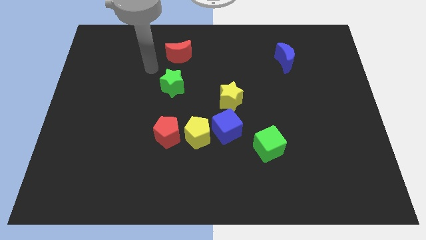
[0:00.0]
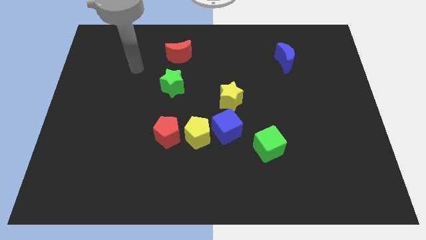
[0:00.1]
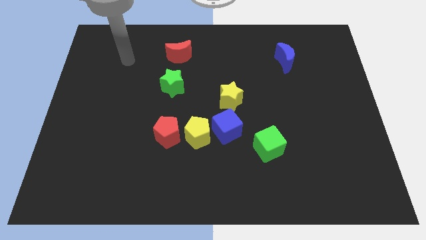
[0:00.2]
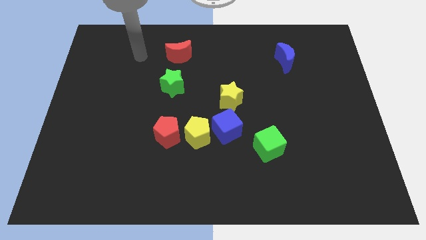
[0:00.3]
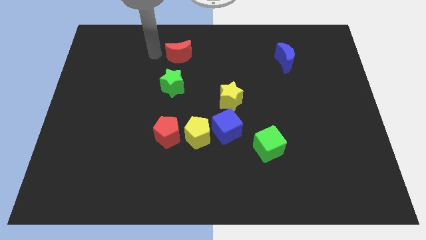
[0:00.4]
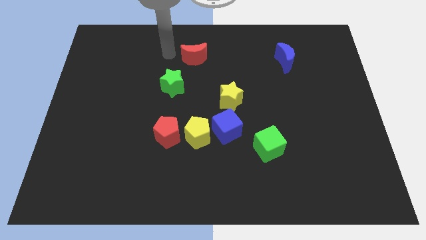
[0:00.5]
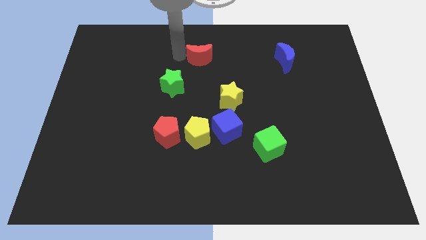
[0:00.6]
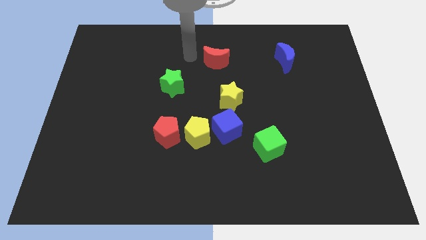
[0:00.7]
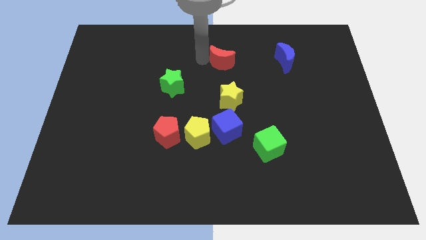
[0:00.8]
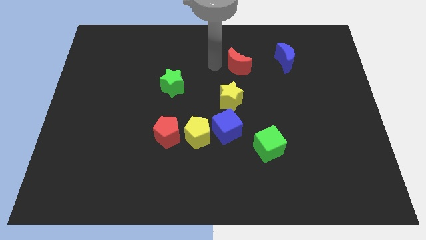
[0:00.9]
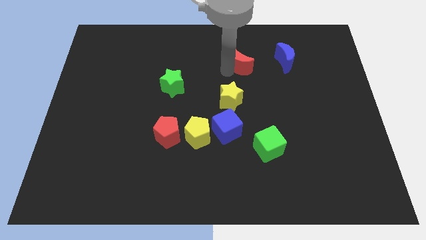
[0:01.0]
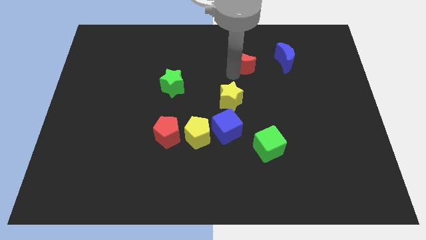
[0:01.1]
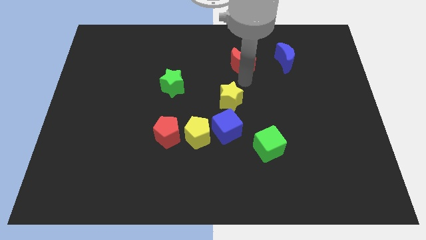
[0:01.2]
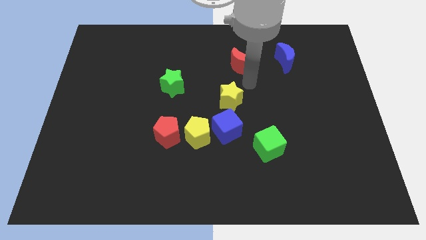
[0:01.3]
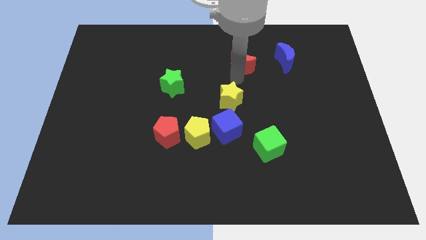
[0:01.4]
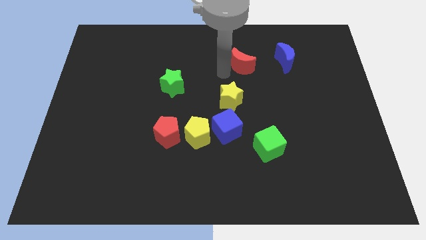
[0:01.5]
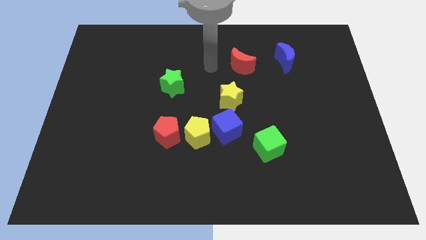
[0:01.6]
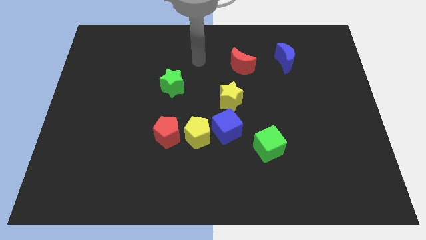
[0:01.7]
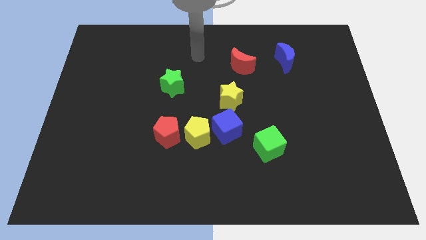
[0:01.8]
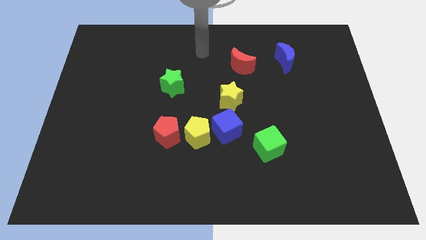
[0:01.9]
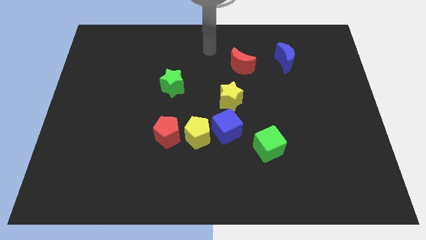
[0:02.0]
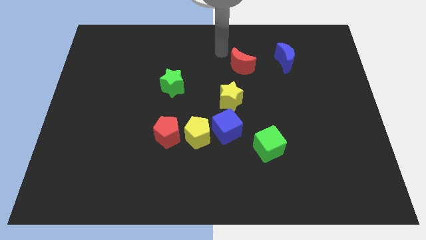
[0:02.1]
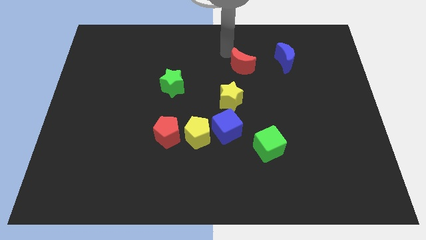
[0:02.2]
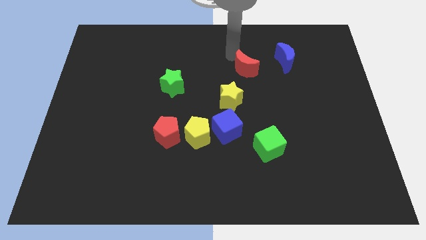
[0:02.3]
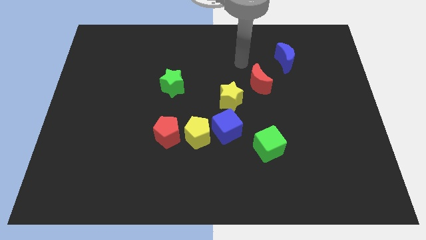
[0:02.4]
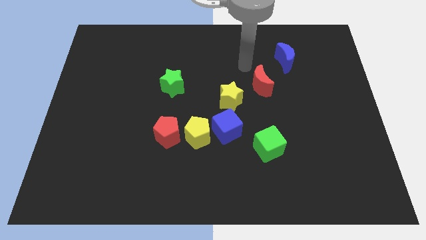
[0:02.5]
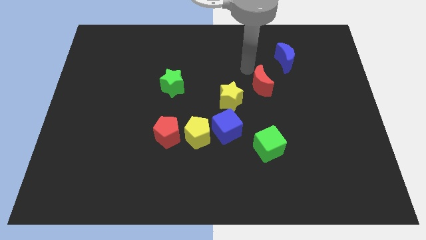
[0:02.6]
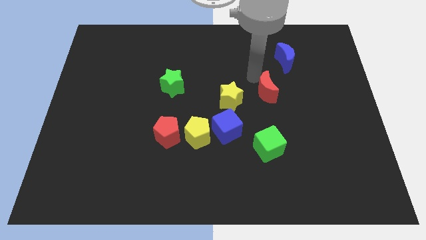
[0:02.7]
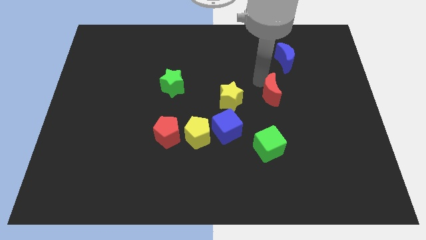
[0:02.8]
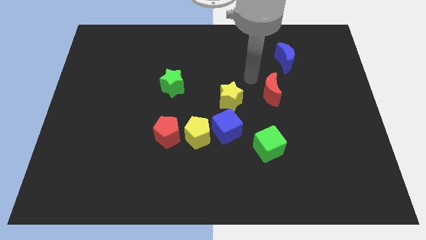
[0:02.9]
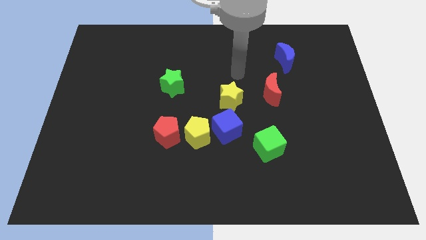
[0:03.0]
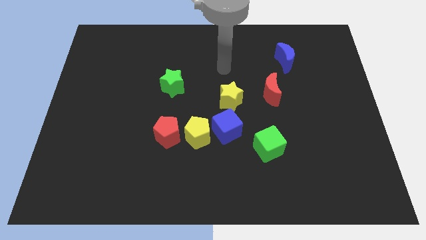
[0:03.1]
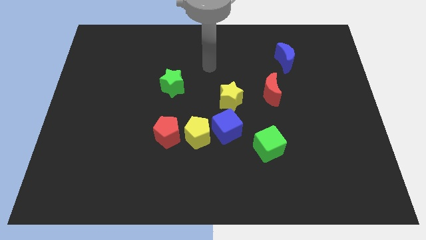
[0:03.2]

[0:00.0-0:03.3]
place the red moon above the green cube

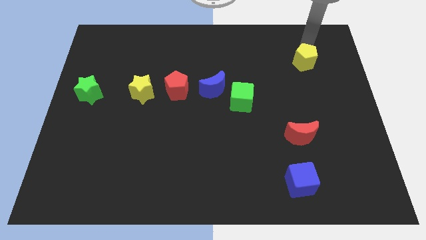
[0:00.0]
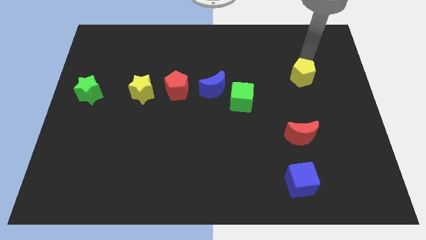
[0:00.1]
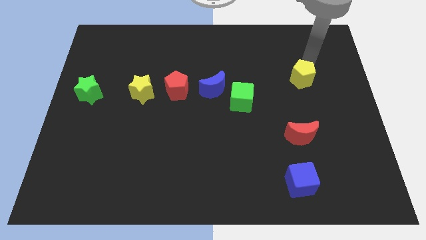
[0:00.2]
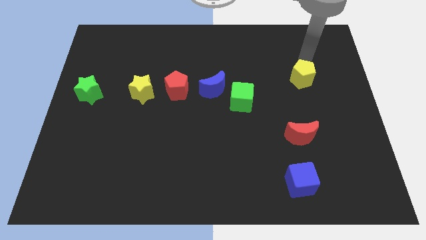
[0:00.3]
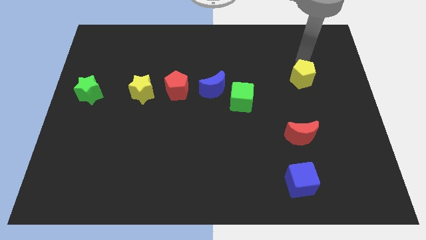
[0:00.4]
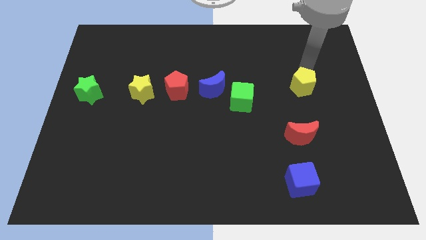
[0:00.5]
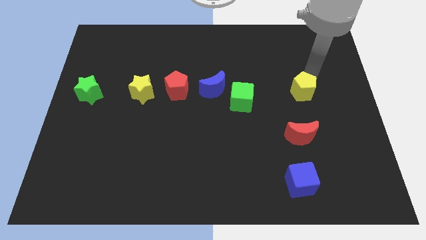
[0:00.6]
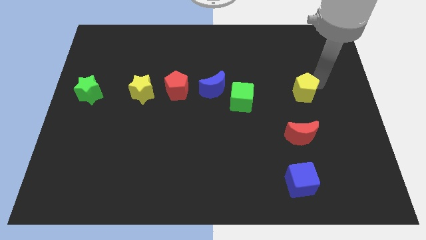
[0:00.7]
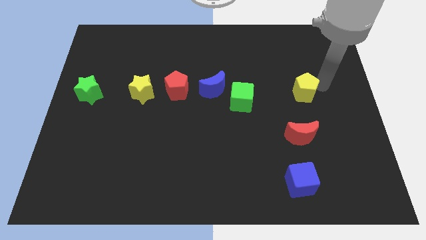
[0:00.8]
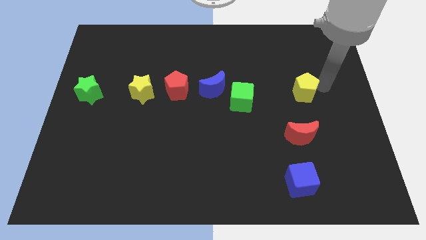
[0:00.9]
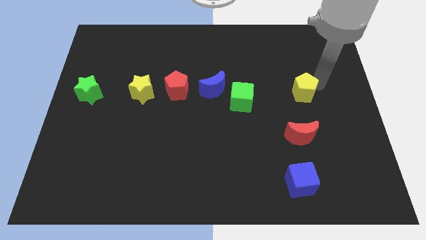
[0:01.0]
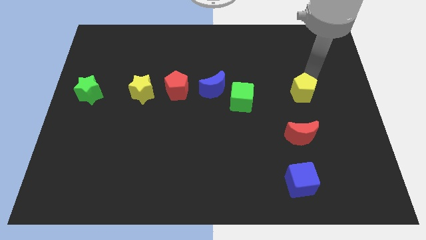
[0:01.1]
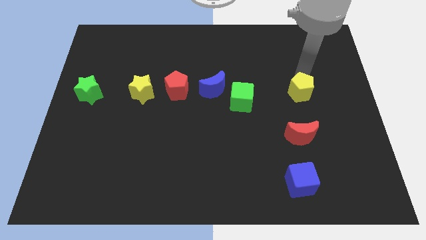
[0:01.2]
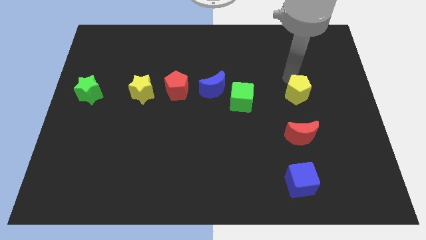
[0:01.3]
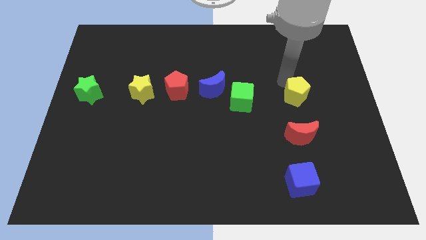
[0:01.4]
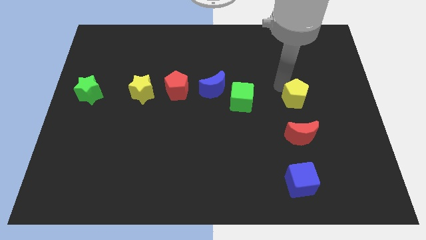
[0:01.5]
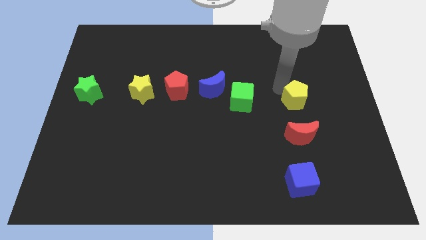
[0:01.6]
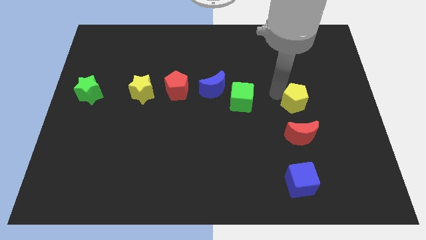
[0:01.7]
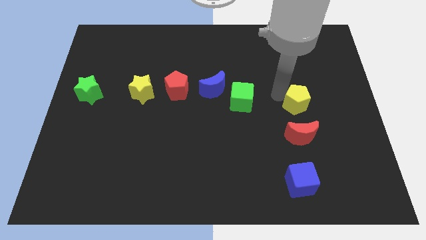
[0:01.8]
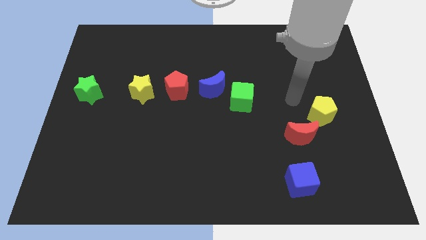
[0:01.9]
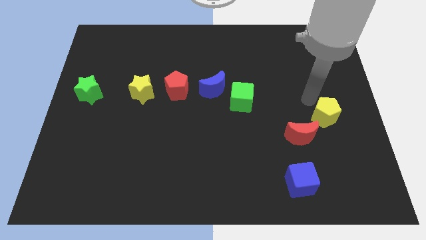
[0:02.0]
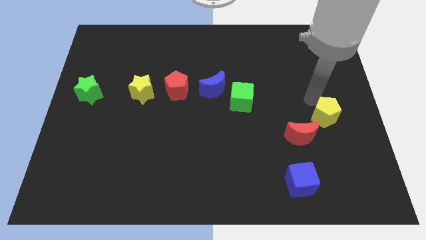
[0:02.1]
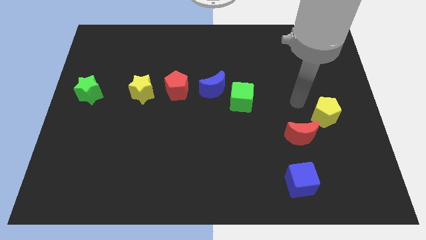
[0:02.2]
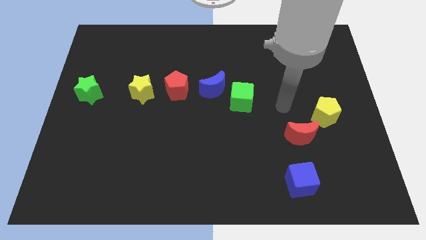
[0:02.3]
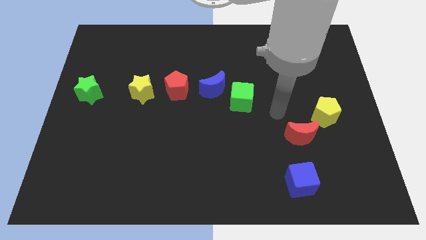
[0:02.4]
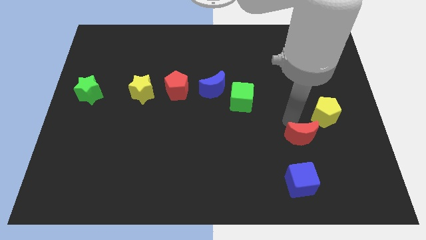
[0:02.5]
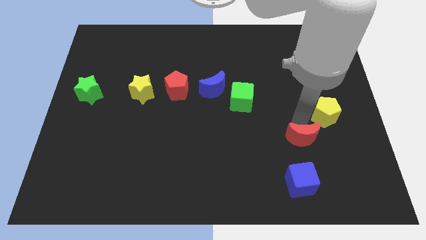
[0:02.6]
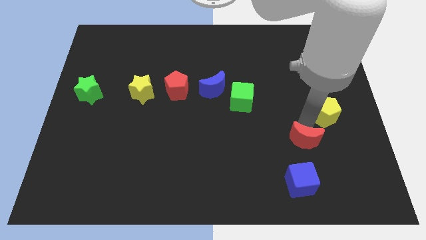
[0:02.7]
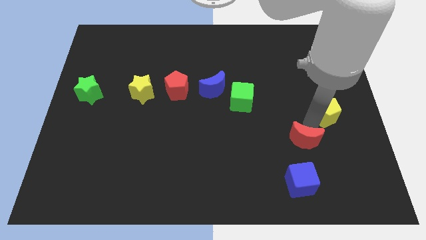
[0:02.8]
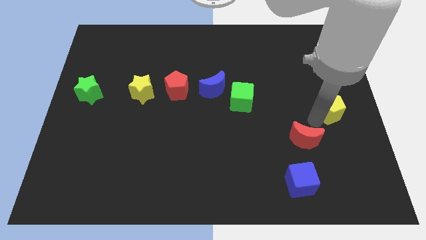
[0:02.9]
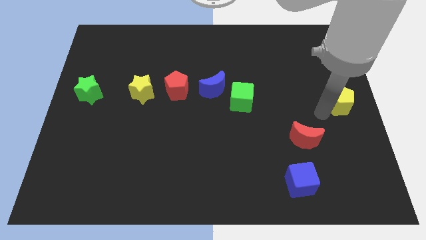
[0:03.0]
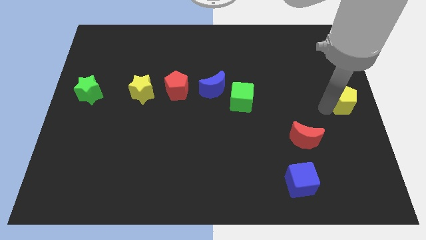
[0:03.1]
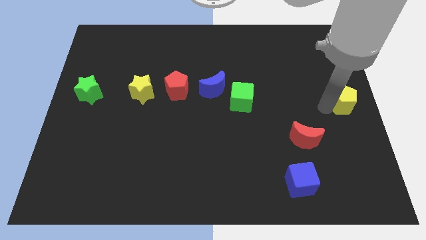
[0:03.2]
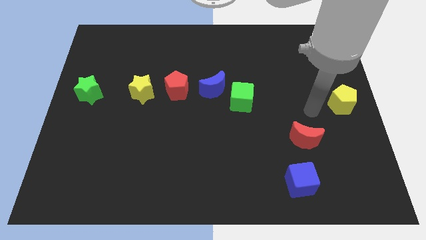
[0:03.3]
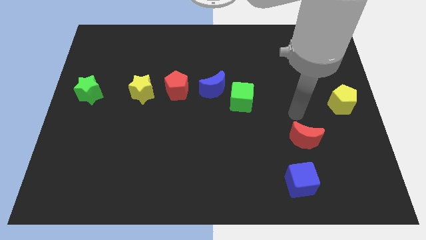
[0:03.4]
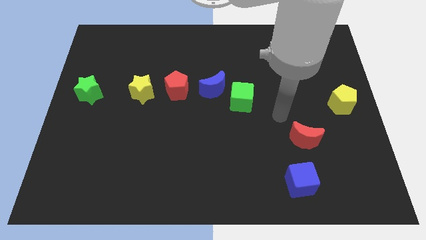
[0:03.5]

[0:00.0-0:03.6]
move the yellow pentagon to the right center of the board

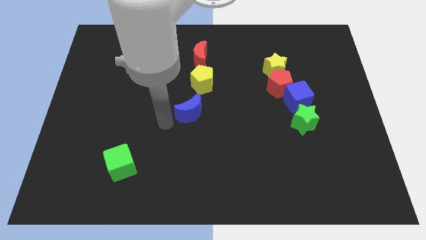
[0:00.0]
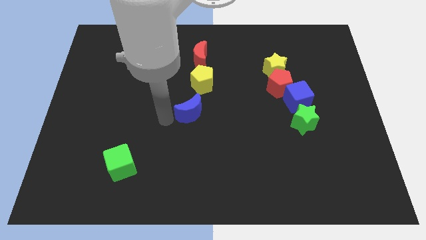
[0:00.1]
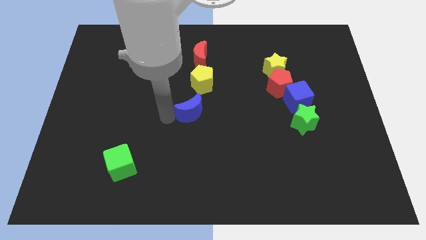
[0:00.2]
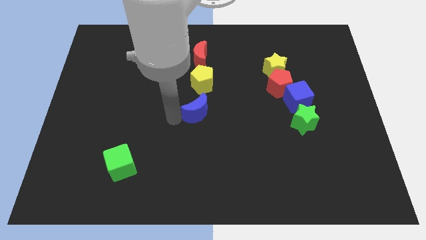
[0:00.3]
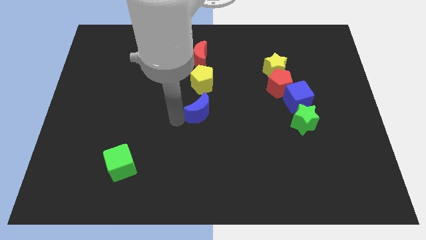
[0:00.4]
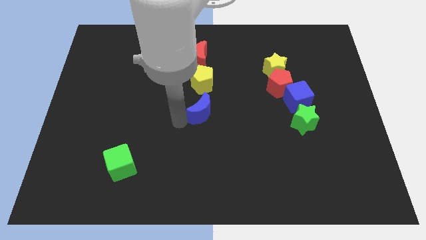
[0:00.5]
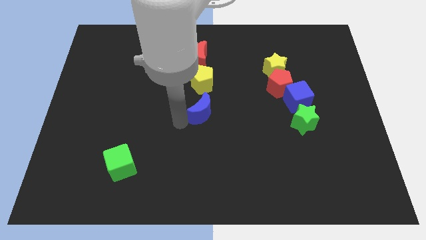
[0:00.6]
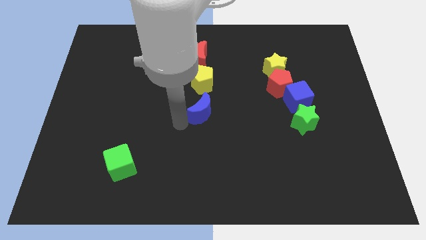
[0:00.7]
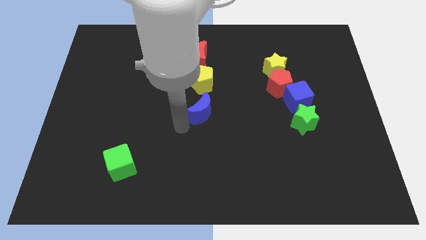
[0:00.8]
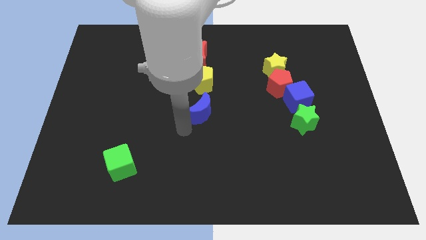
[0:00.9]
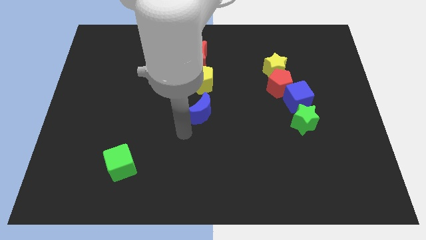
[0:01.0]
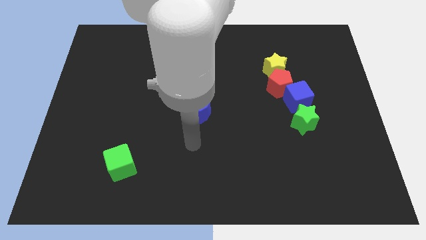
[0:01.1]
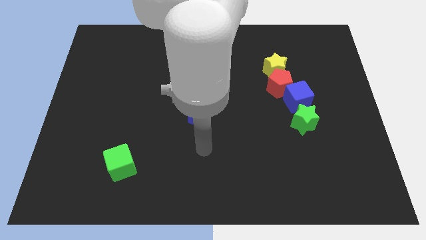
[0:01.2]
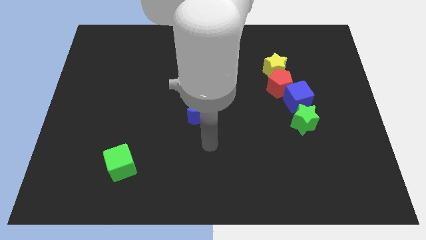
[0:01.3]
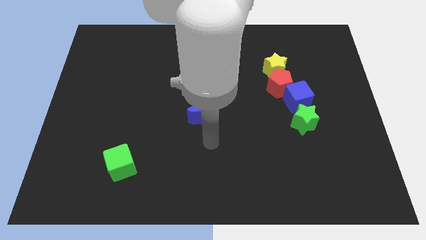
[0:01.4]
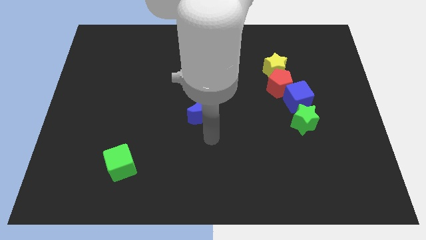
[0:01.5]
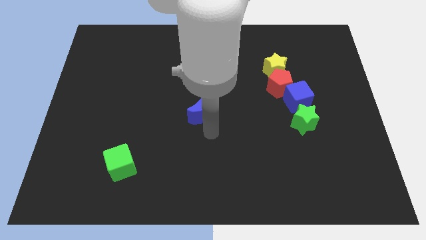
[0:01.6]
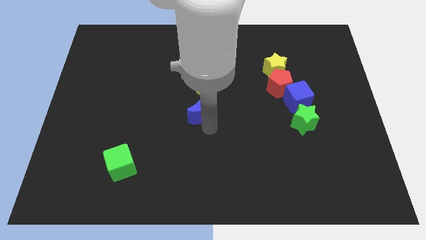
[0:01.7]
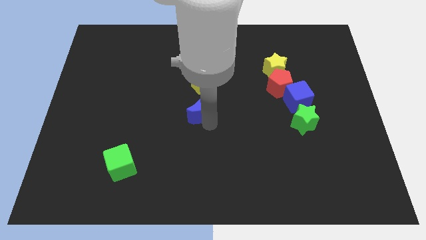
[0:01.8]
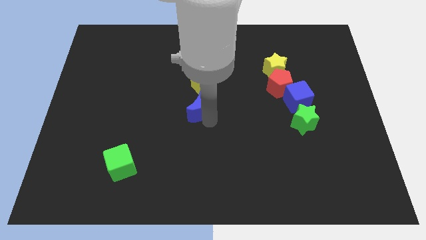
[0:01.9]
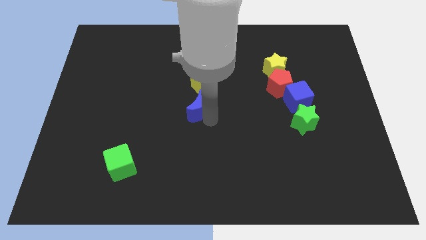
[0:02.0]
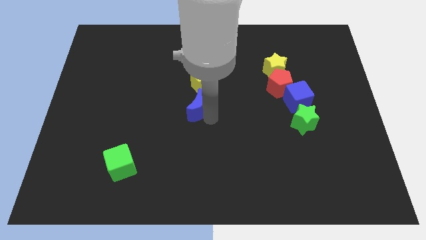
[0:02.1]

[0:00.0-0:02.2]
place blue crescent close to yellow pentagon
